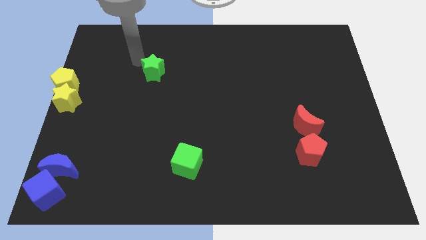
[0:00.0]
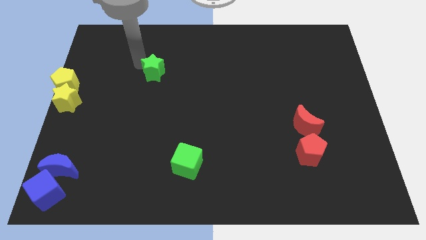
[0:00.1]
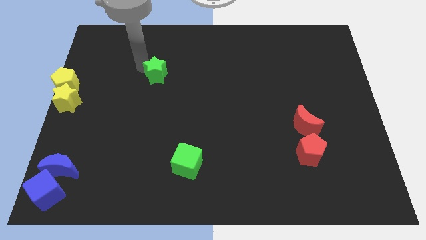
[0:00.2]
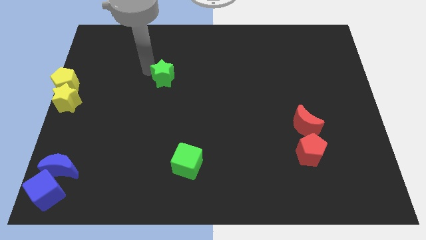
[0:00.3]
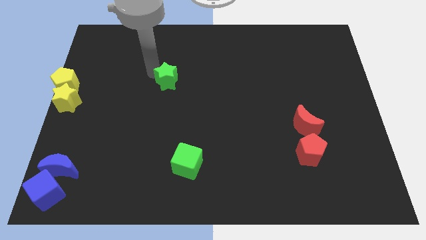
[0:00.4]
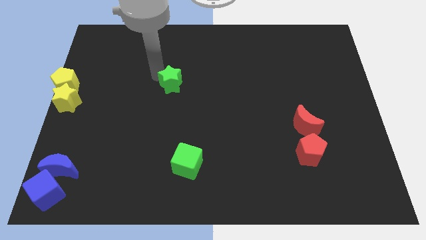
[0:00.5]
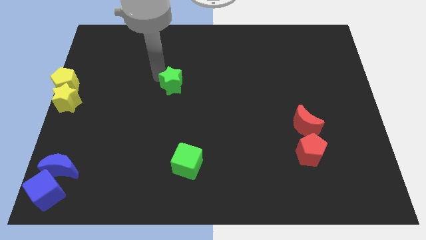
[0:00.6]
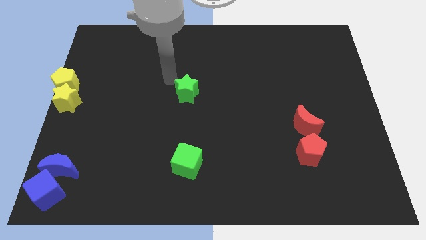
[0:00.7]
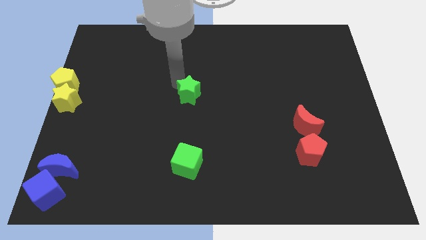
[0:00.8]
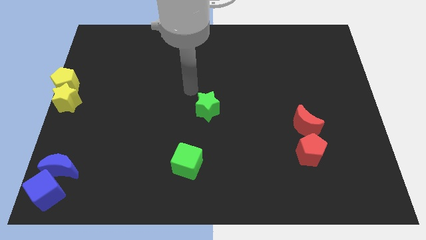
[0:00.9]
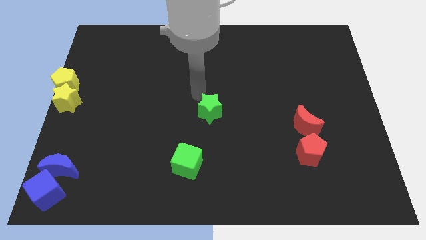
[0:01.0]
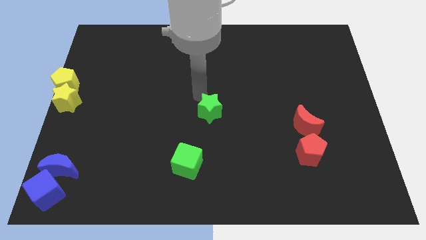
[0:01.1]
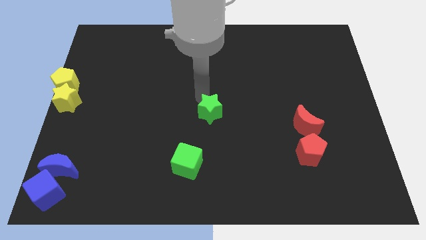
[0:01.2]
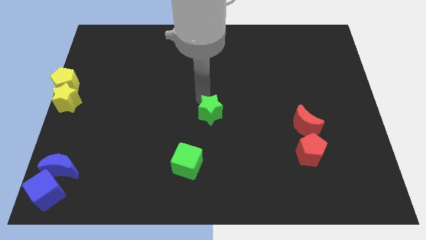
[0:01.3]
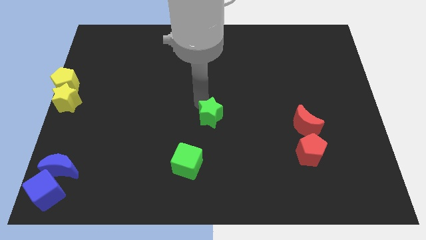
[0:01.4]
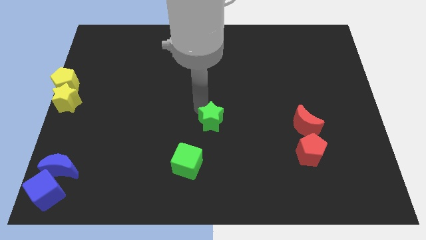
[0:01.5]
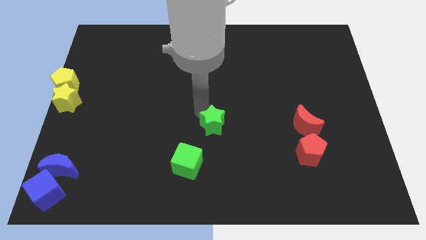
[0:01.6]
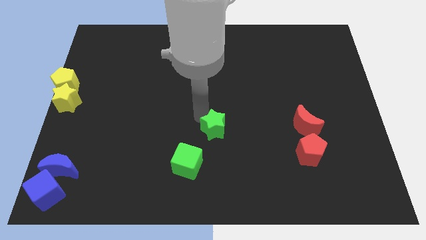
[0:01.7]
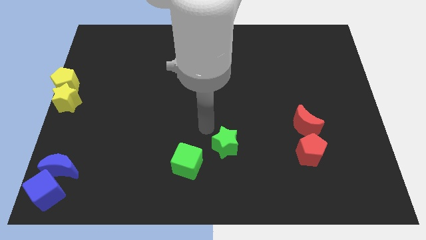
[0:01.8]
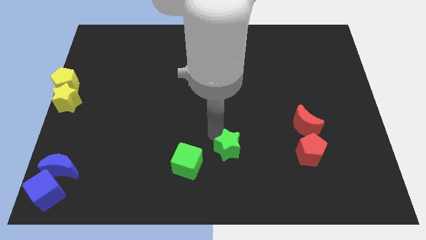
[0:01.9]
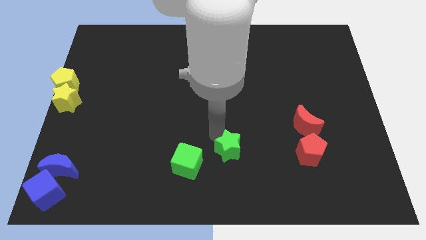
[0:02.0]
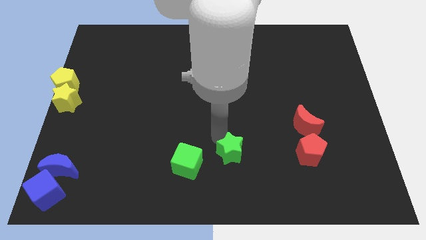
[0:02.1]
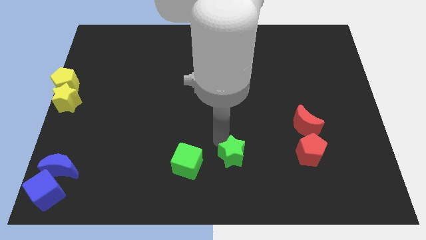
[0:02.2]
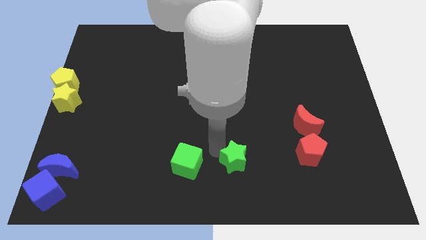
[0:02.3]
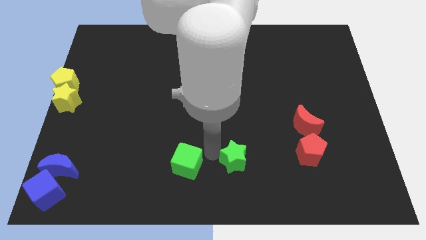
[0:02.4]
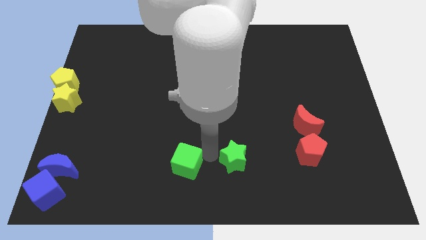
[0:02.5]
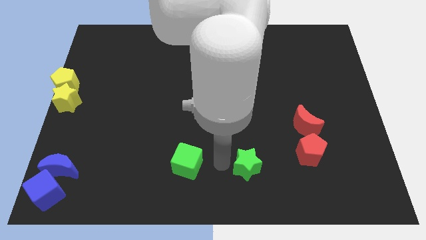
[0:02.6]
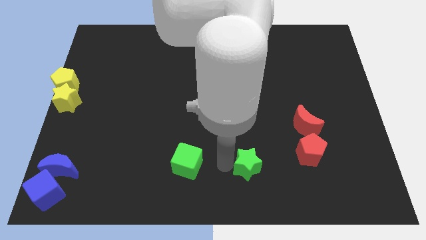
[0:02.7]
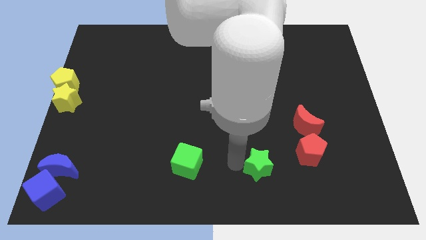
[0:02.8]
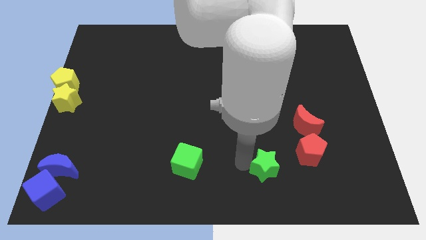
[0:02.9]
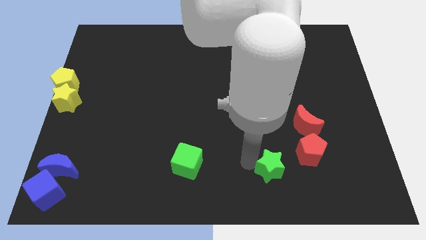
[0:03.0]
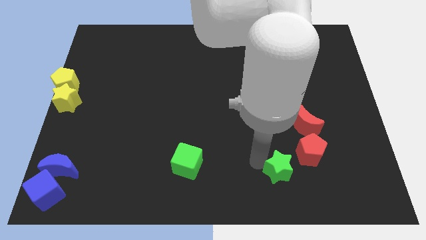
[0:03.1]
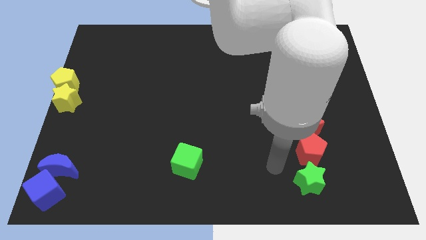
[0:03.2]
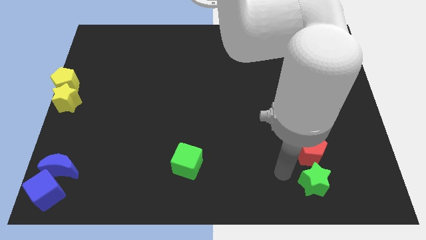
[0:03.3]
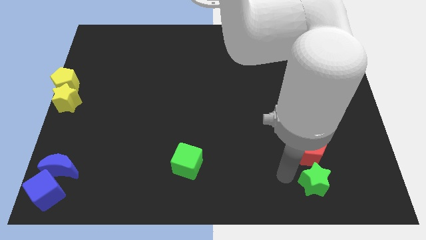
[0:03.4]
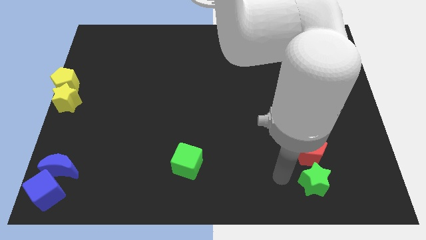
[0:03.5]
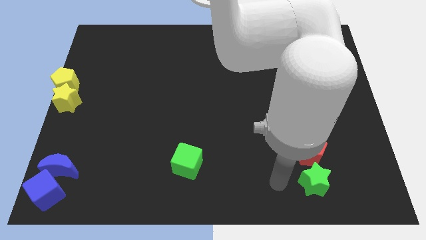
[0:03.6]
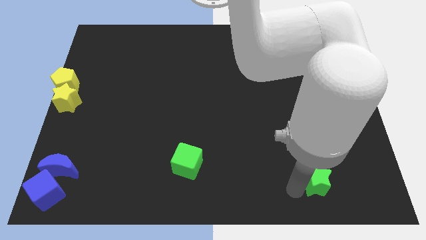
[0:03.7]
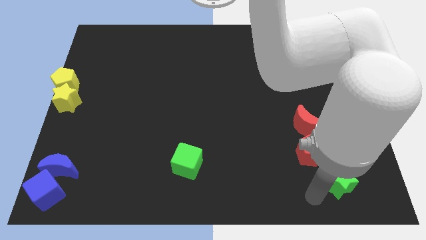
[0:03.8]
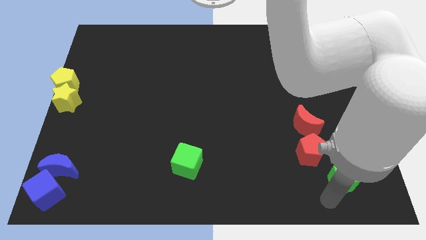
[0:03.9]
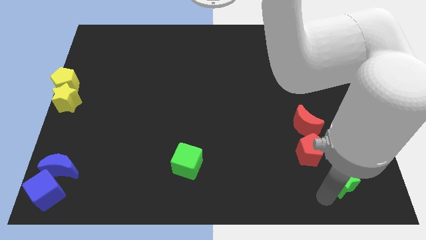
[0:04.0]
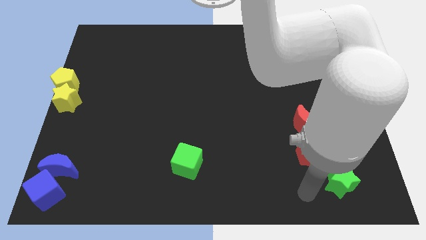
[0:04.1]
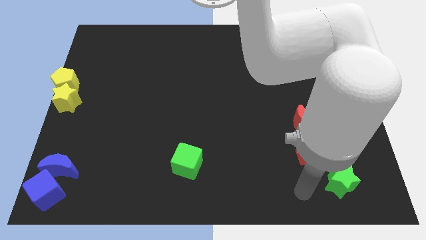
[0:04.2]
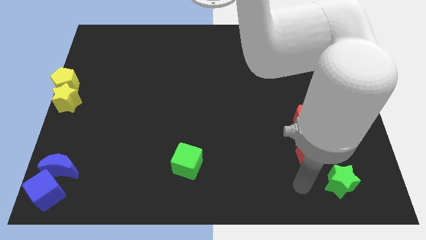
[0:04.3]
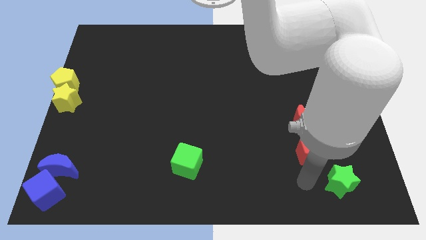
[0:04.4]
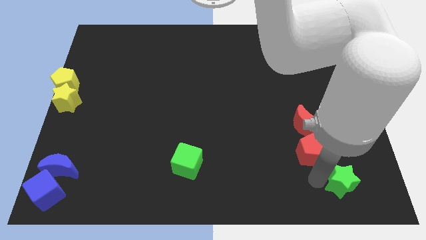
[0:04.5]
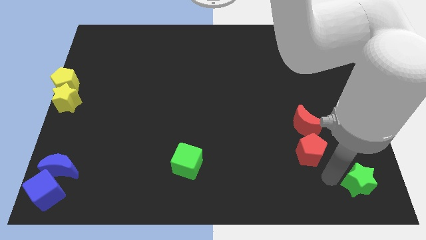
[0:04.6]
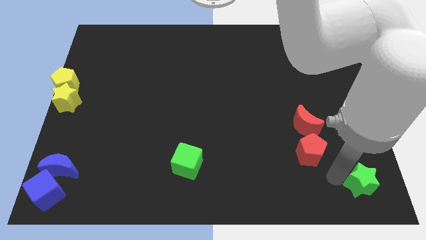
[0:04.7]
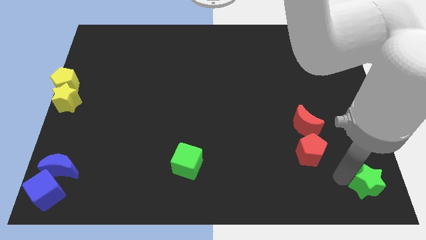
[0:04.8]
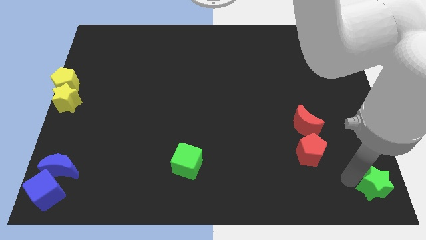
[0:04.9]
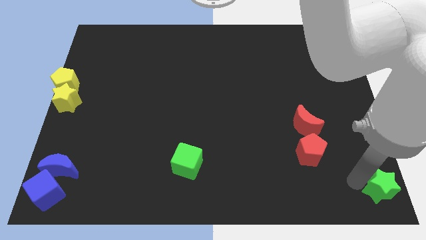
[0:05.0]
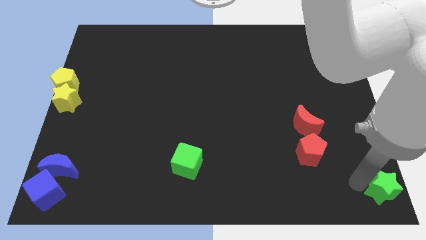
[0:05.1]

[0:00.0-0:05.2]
move the green star to the bottom right corner of the board

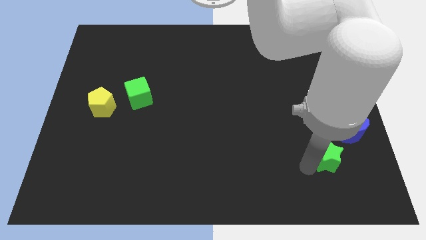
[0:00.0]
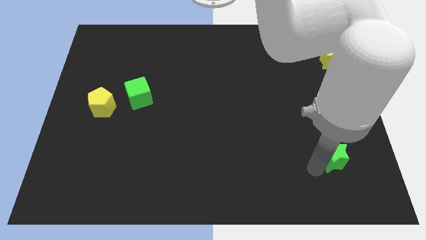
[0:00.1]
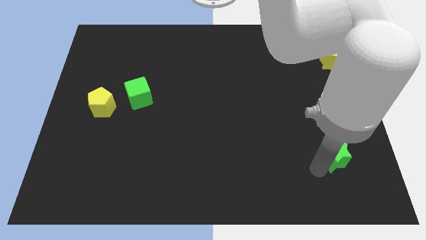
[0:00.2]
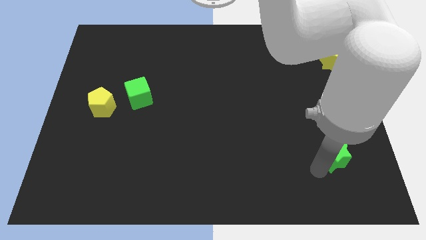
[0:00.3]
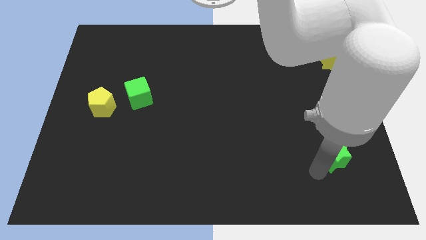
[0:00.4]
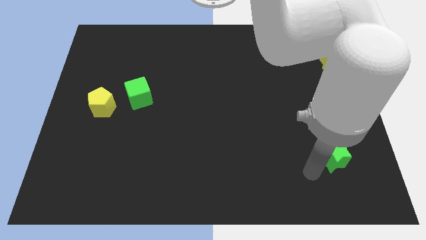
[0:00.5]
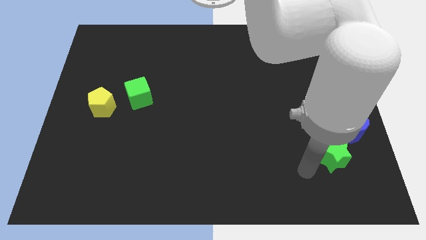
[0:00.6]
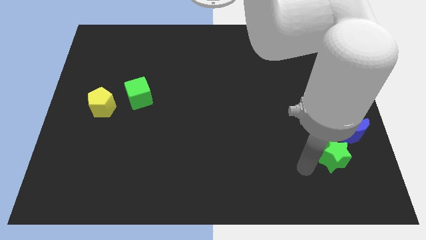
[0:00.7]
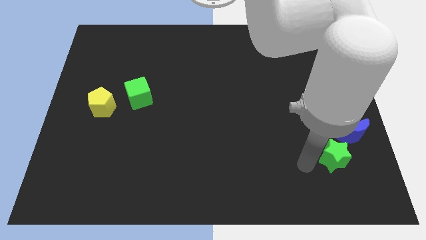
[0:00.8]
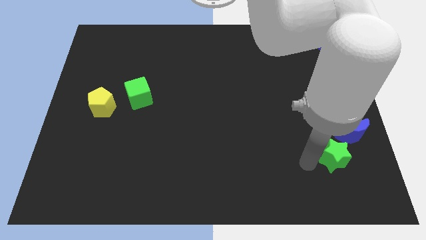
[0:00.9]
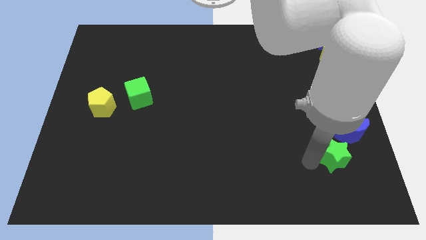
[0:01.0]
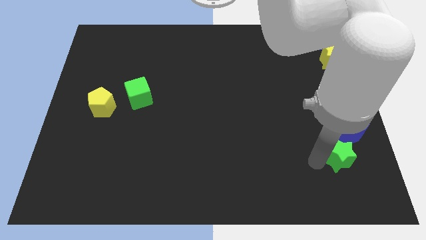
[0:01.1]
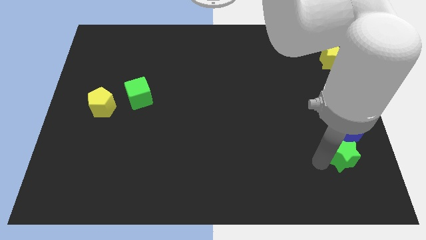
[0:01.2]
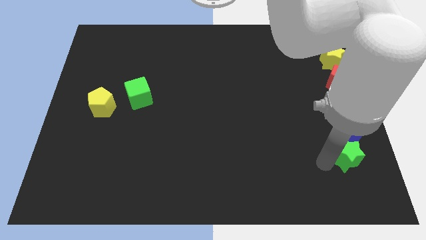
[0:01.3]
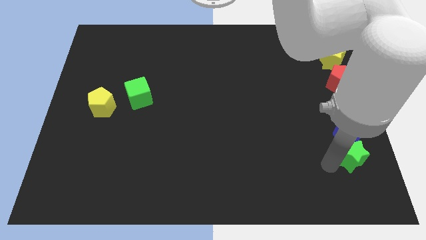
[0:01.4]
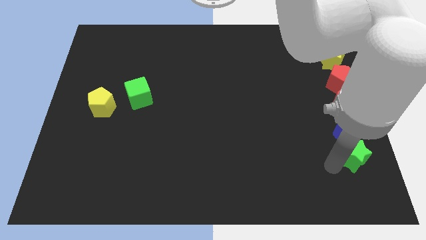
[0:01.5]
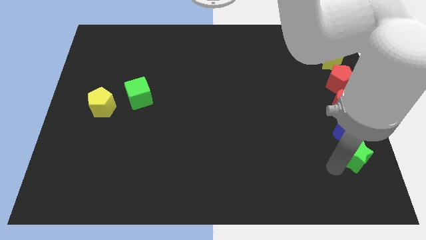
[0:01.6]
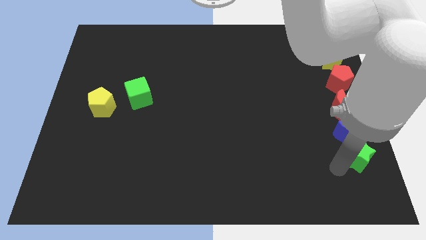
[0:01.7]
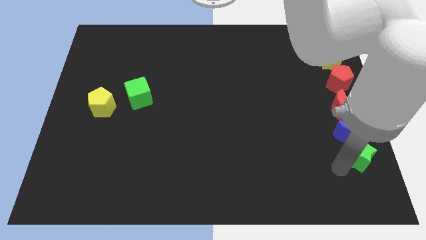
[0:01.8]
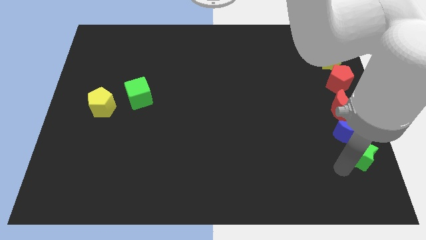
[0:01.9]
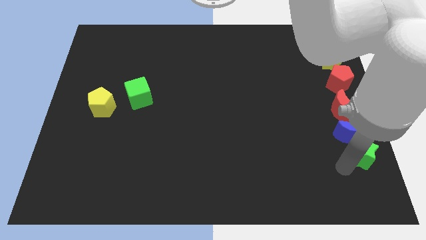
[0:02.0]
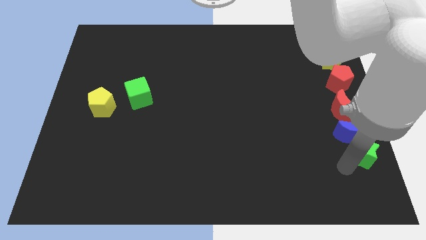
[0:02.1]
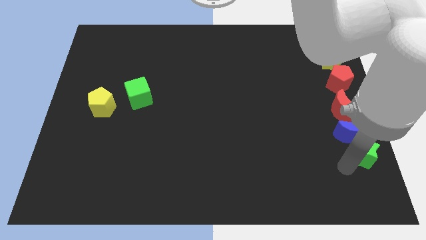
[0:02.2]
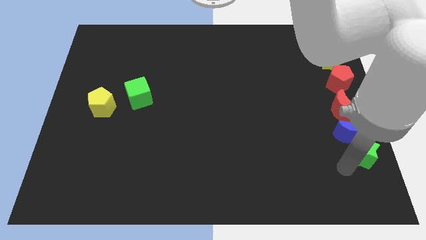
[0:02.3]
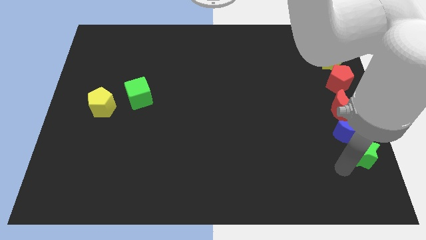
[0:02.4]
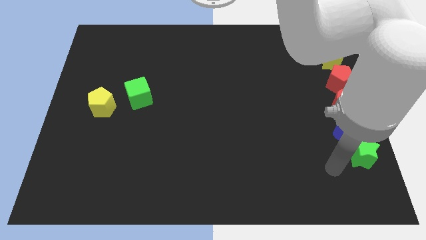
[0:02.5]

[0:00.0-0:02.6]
push the green star to the bottom of blue crescent

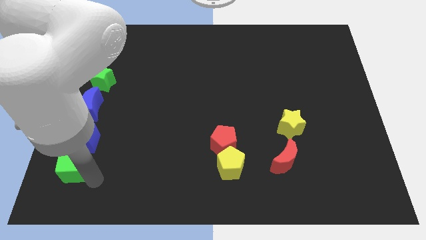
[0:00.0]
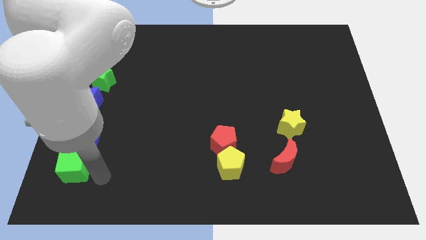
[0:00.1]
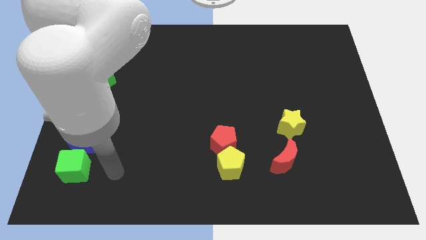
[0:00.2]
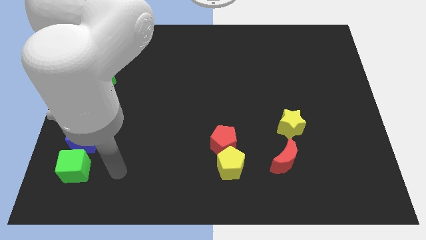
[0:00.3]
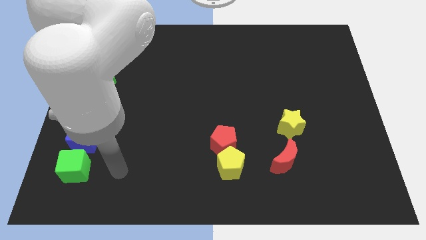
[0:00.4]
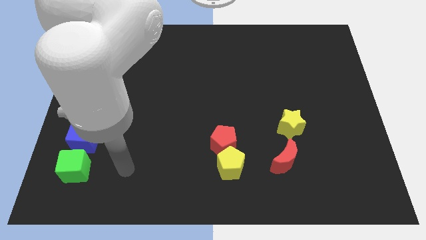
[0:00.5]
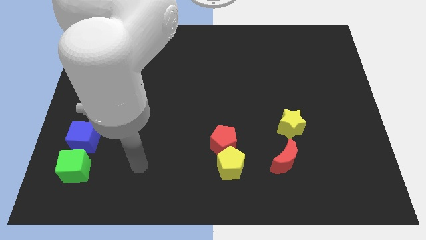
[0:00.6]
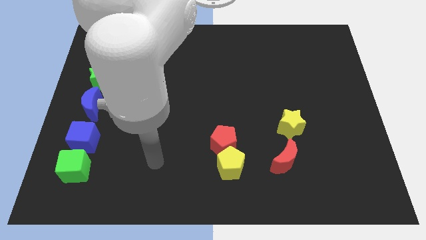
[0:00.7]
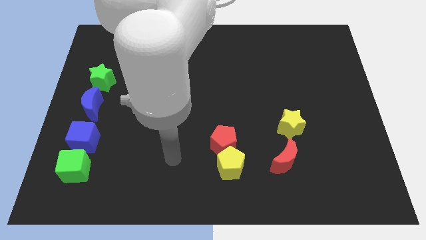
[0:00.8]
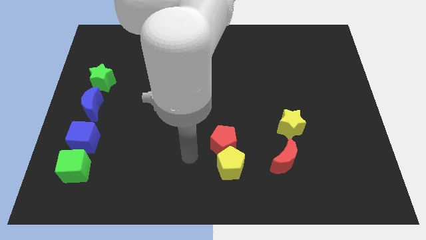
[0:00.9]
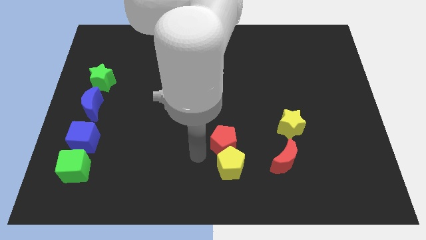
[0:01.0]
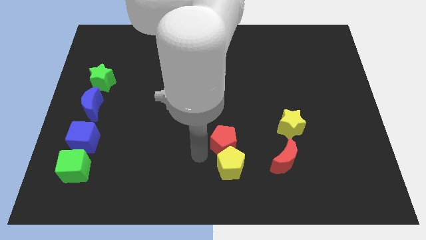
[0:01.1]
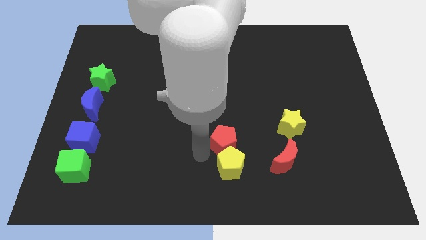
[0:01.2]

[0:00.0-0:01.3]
move away from the green cube
